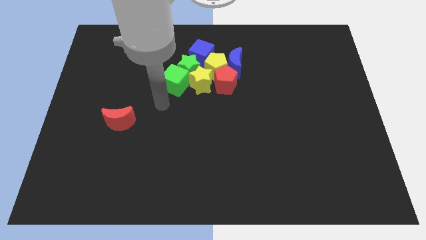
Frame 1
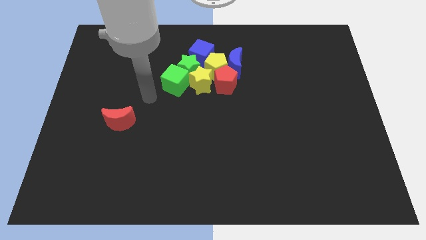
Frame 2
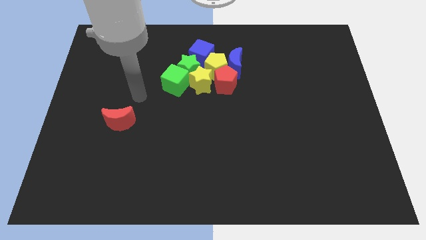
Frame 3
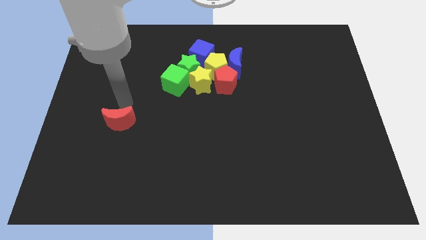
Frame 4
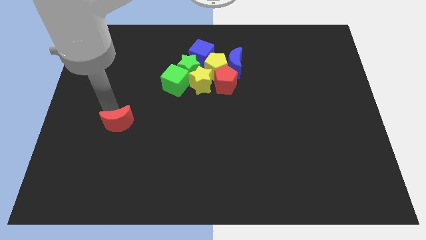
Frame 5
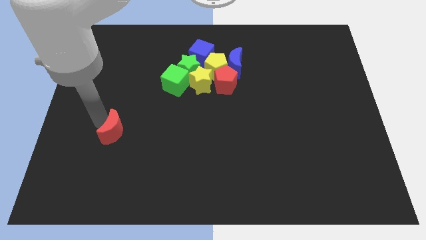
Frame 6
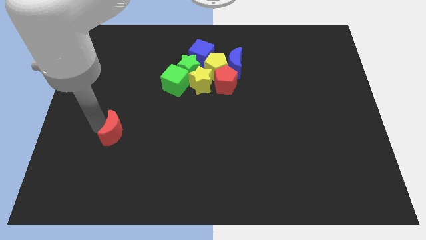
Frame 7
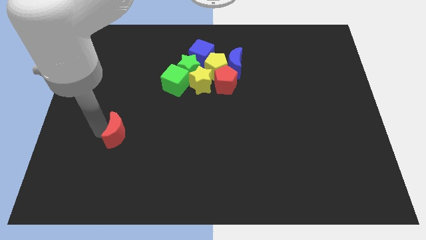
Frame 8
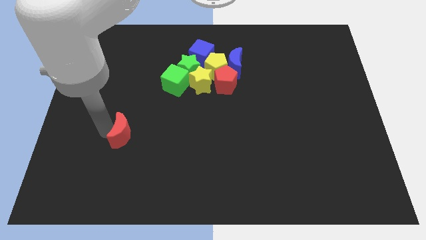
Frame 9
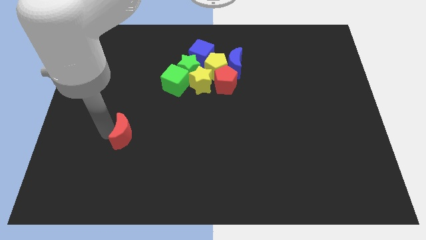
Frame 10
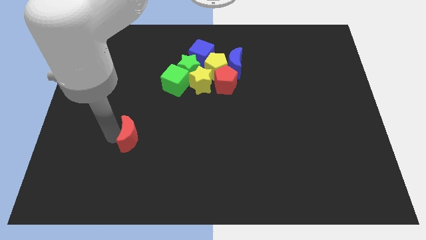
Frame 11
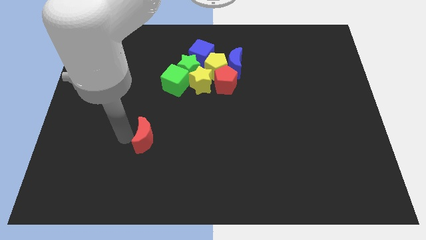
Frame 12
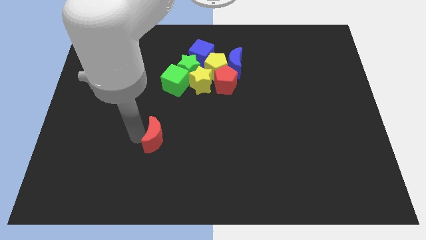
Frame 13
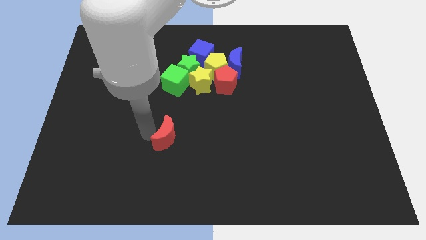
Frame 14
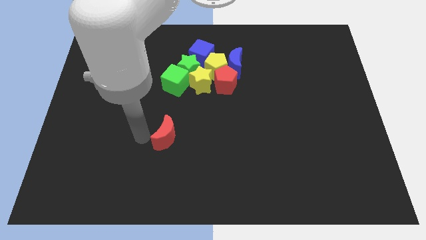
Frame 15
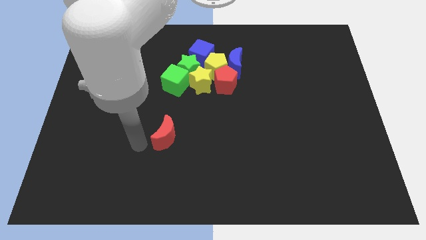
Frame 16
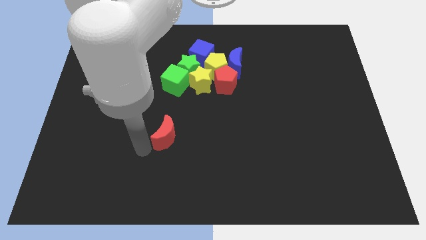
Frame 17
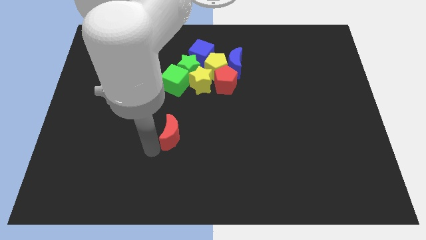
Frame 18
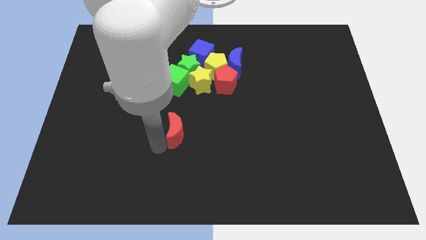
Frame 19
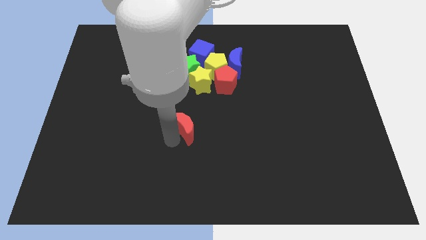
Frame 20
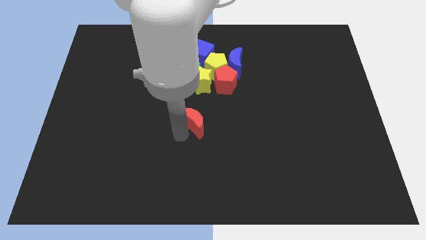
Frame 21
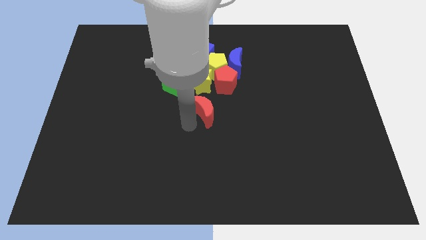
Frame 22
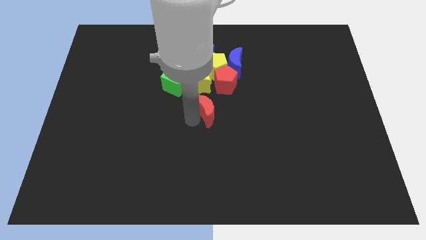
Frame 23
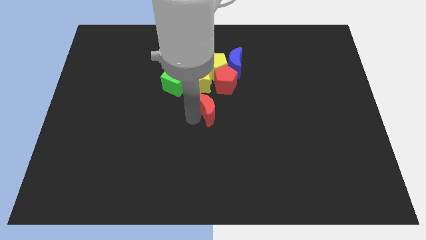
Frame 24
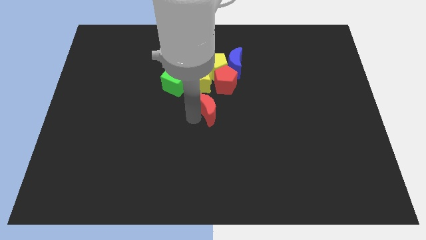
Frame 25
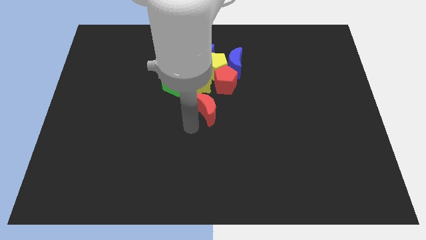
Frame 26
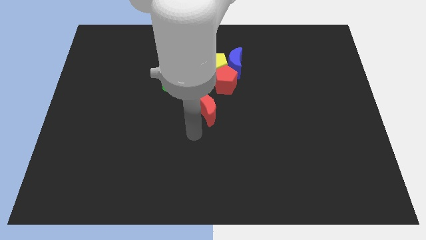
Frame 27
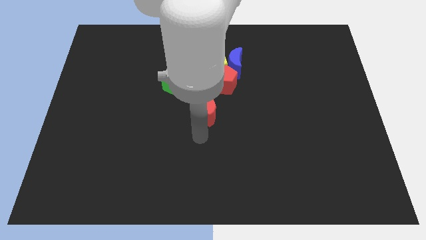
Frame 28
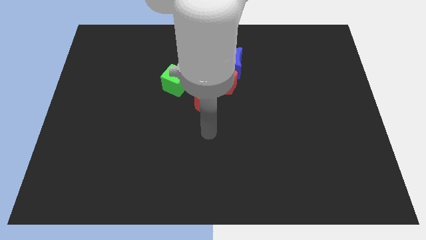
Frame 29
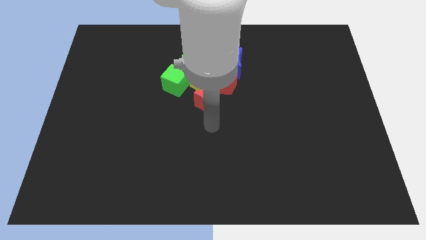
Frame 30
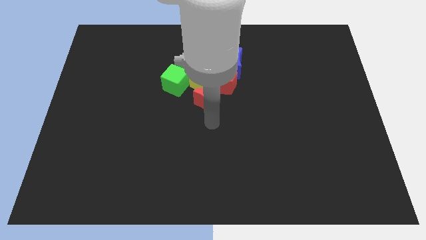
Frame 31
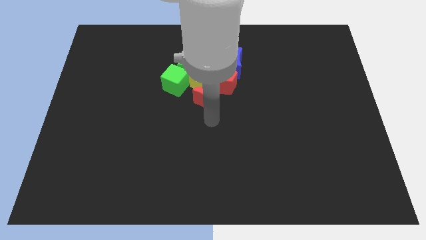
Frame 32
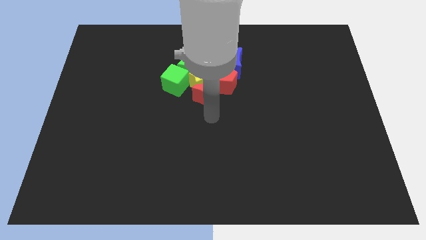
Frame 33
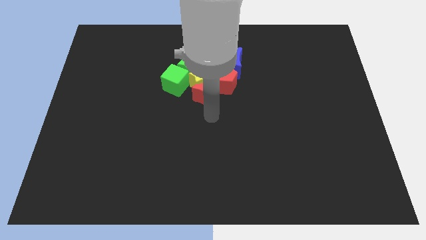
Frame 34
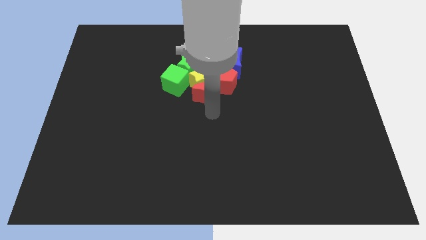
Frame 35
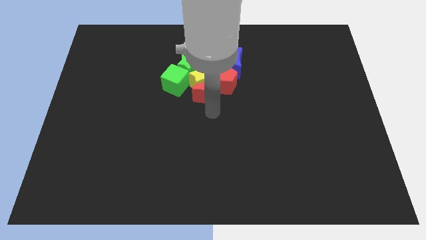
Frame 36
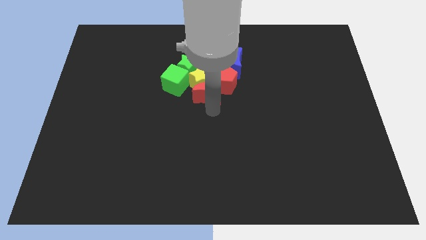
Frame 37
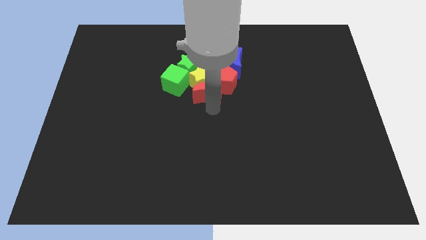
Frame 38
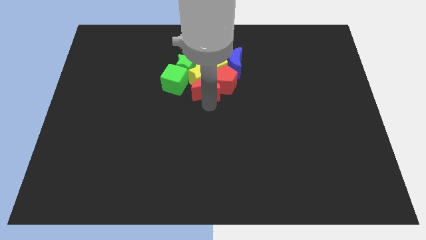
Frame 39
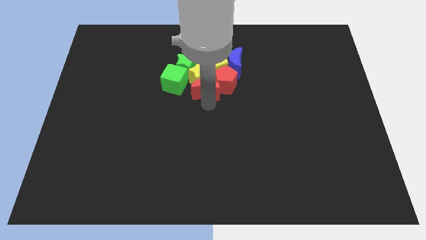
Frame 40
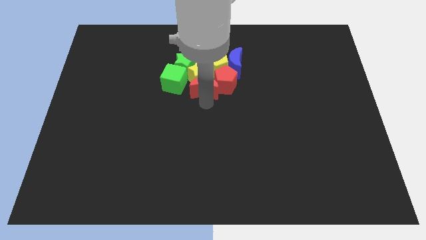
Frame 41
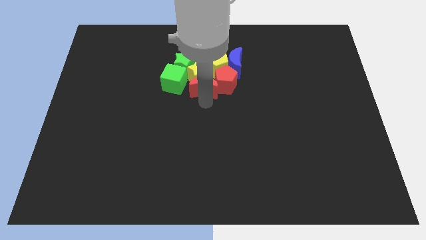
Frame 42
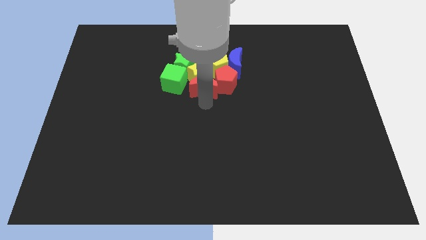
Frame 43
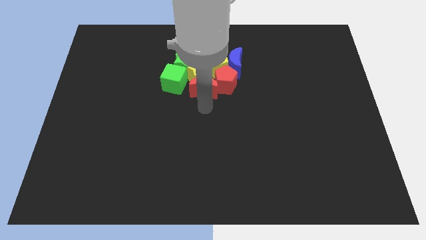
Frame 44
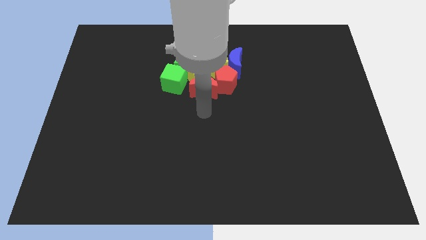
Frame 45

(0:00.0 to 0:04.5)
push the red moon into yellow star

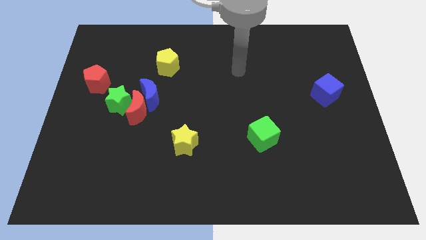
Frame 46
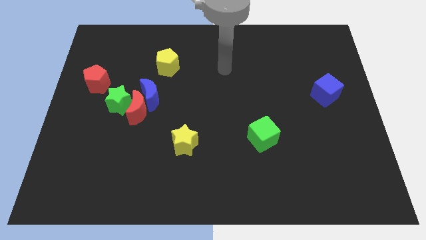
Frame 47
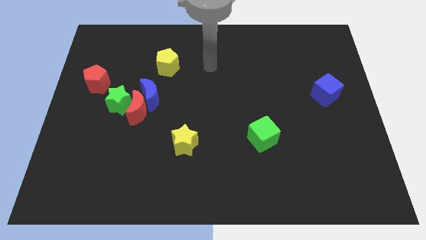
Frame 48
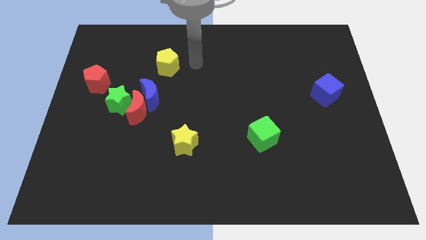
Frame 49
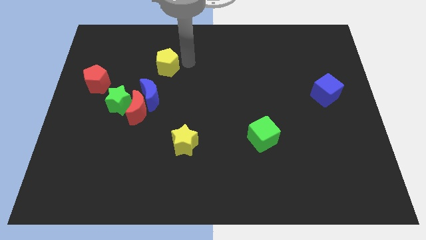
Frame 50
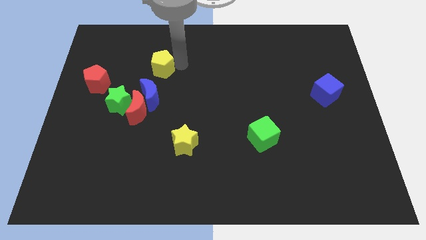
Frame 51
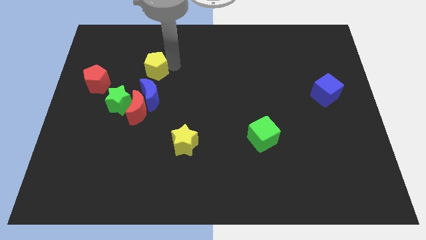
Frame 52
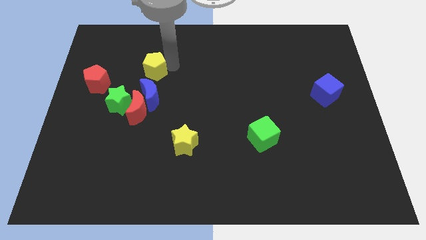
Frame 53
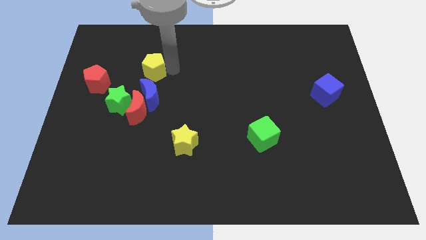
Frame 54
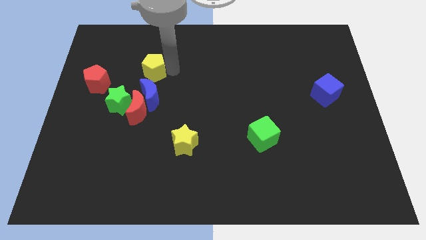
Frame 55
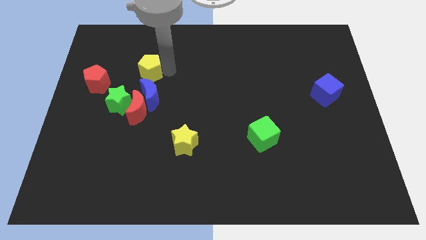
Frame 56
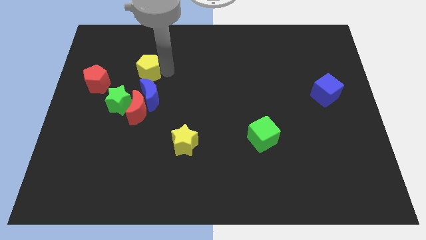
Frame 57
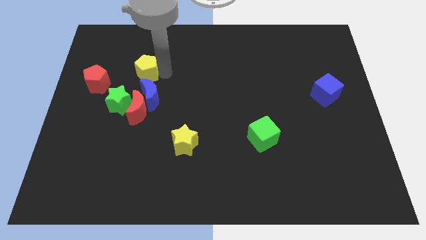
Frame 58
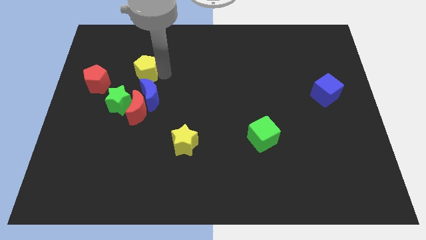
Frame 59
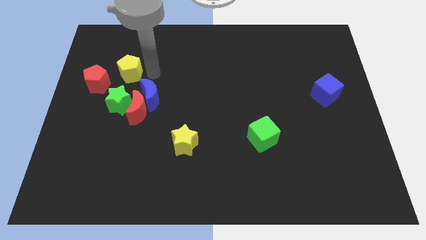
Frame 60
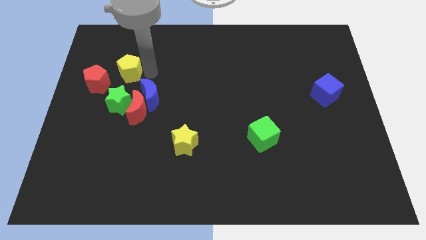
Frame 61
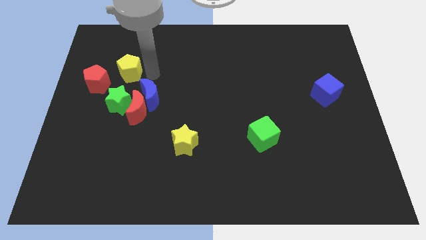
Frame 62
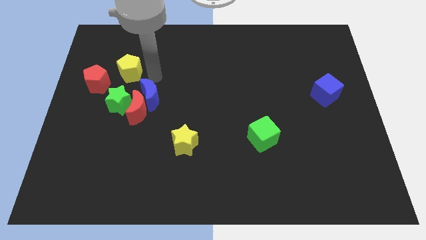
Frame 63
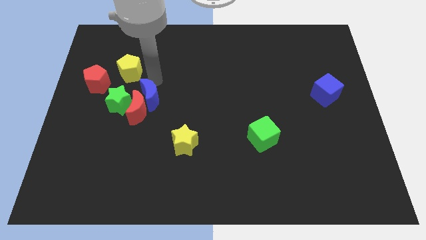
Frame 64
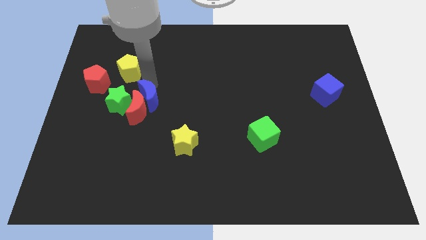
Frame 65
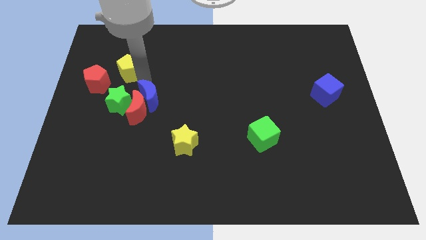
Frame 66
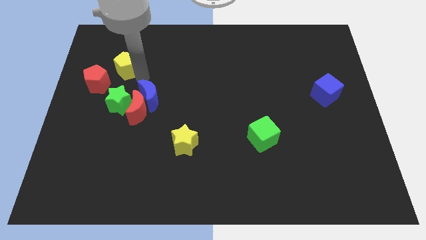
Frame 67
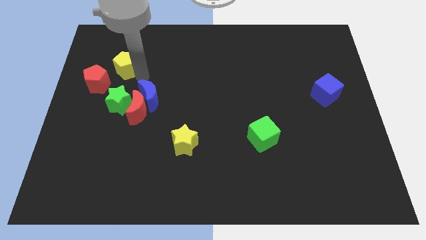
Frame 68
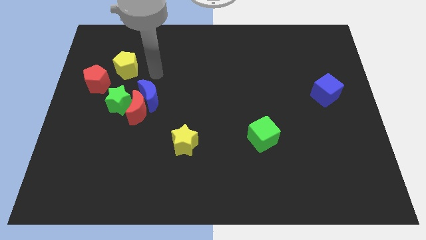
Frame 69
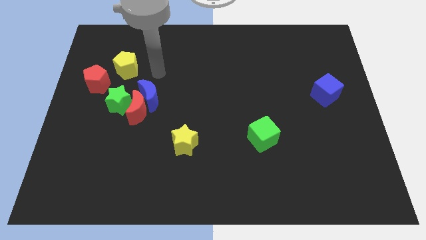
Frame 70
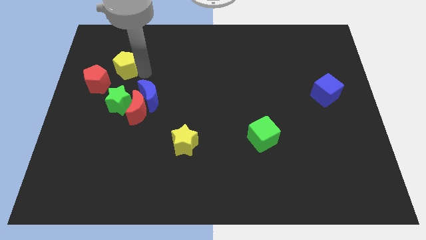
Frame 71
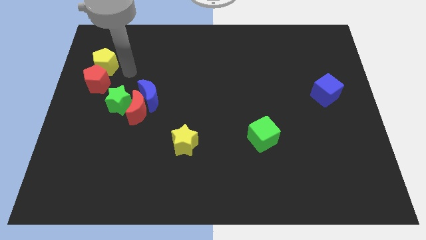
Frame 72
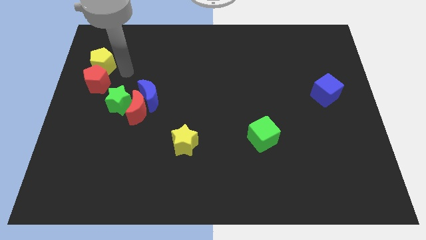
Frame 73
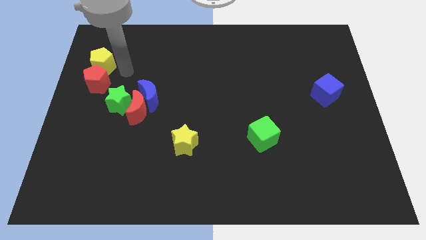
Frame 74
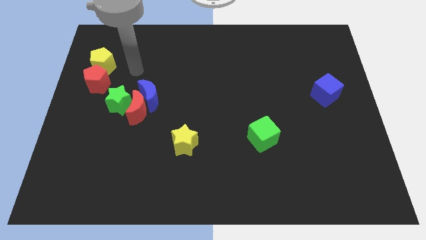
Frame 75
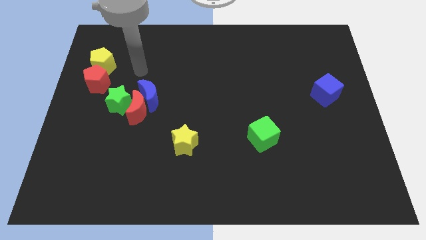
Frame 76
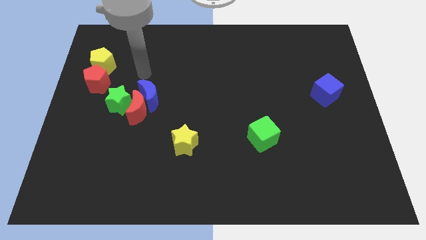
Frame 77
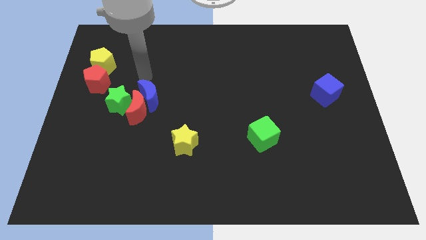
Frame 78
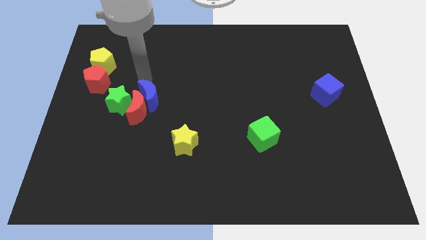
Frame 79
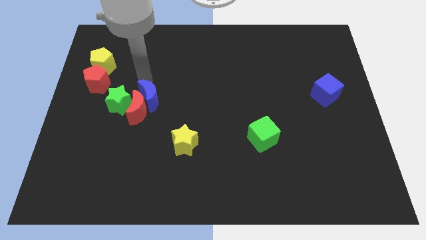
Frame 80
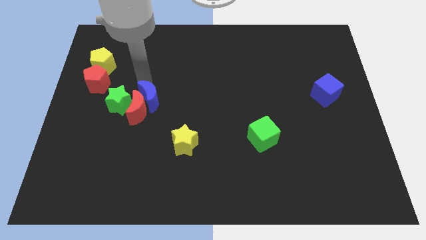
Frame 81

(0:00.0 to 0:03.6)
place yellow pentagon to the top of the red pentagon

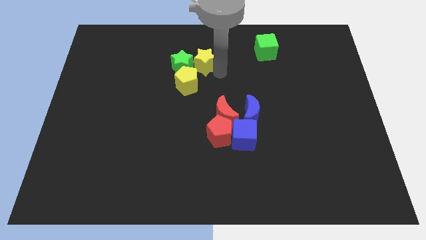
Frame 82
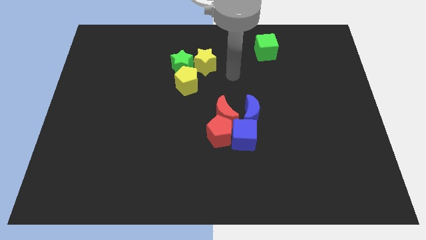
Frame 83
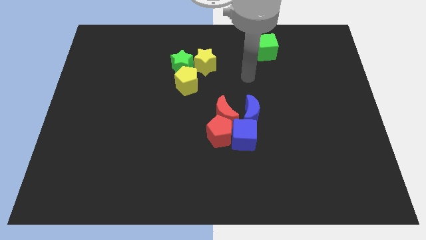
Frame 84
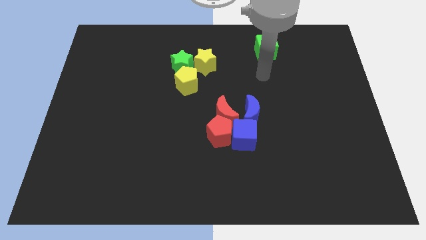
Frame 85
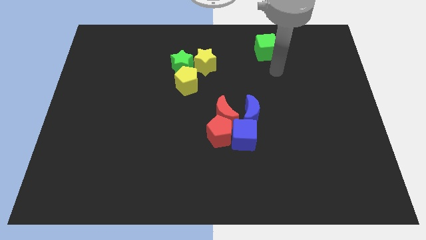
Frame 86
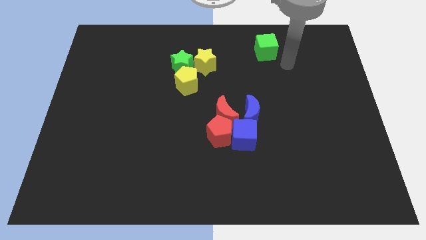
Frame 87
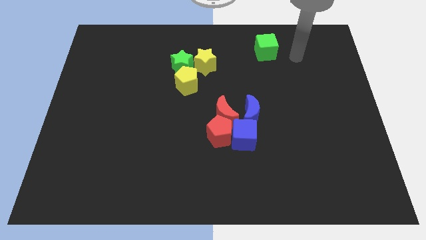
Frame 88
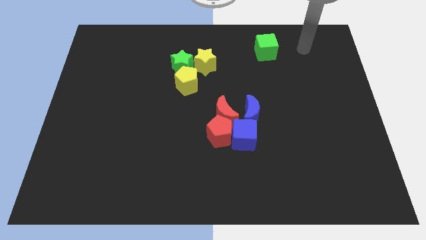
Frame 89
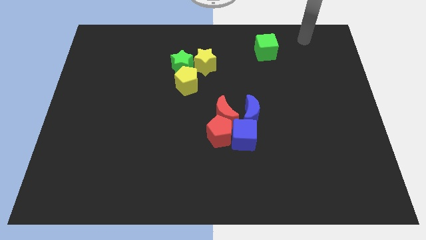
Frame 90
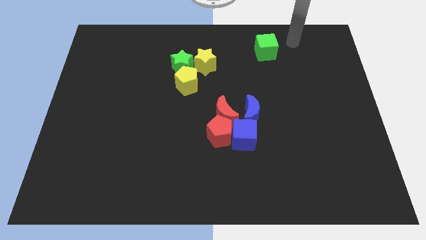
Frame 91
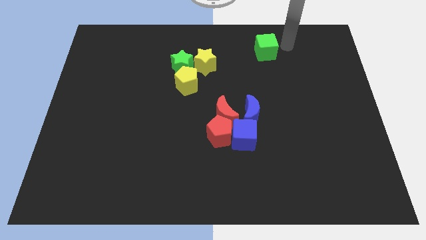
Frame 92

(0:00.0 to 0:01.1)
move your arm right of the green cube
